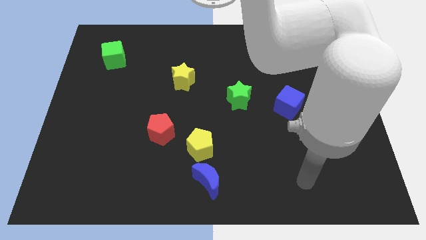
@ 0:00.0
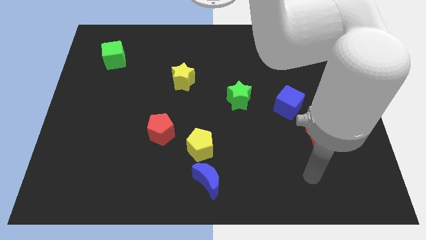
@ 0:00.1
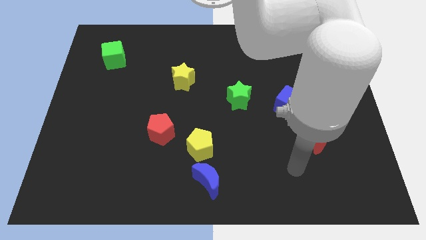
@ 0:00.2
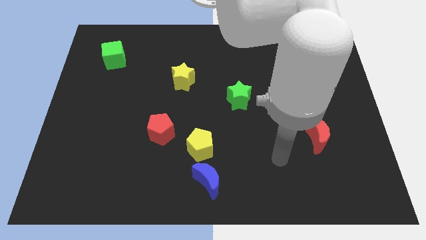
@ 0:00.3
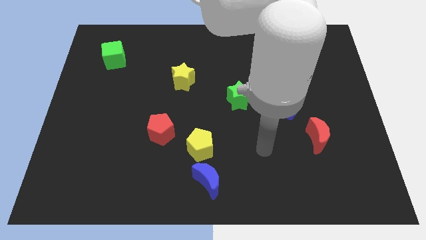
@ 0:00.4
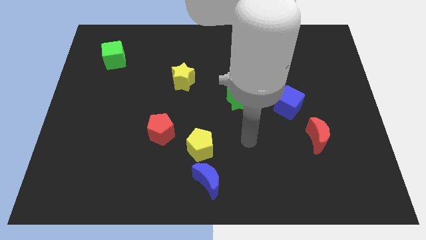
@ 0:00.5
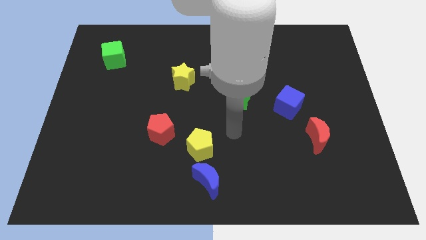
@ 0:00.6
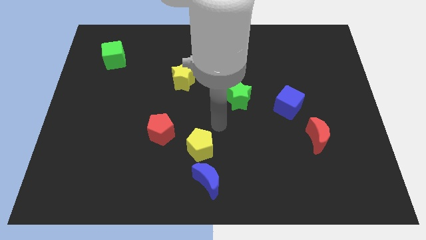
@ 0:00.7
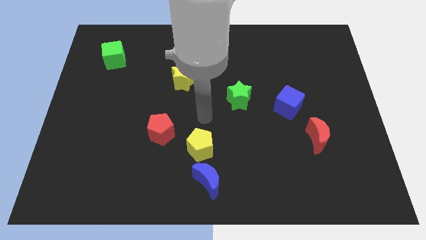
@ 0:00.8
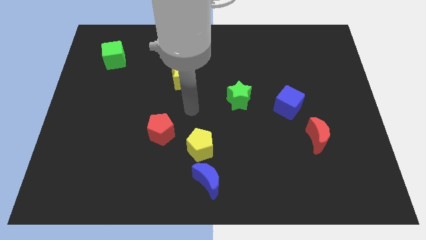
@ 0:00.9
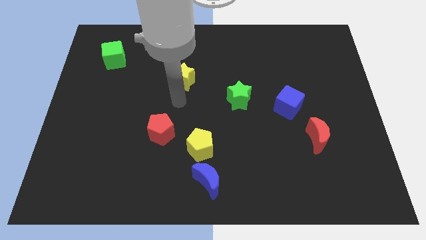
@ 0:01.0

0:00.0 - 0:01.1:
point the arm below the yellow star

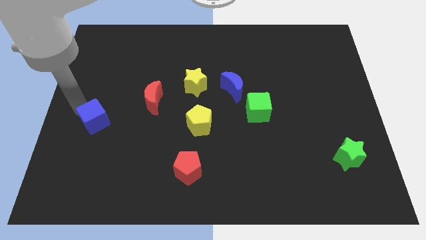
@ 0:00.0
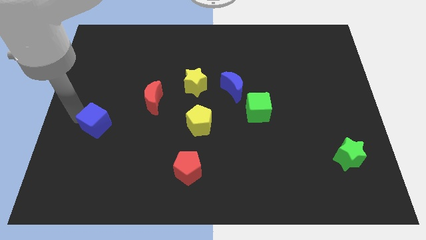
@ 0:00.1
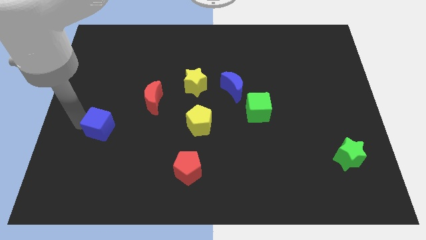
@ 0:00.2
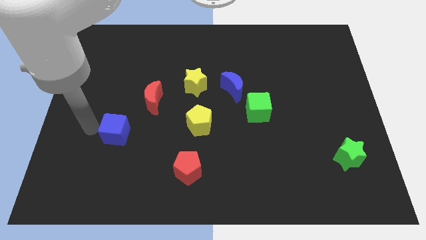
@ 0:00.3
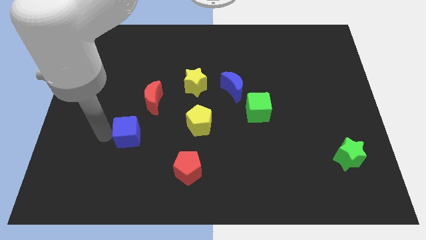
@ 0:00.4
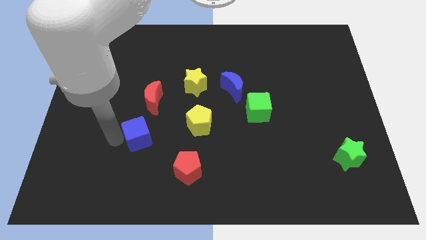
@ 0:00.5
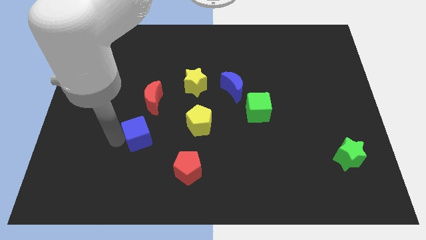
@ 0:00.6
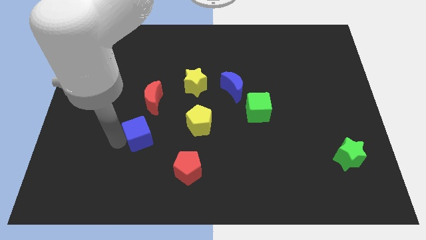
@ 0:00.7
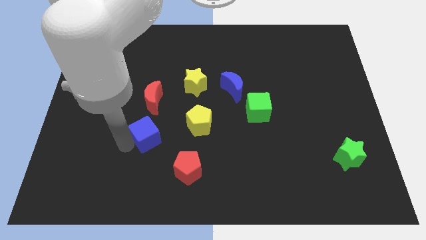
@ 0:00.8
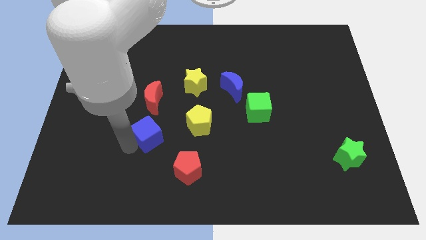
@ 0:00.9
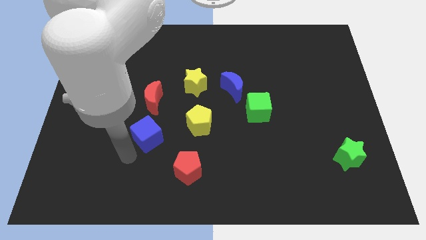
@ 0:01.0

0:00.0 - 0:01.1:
place the blue cube below the red moon

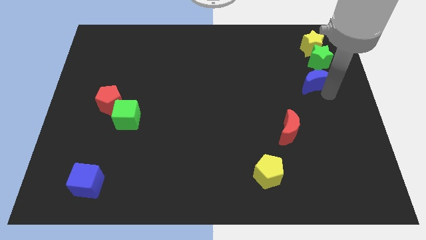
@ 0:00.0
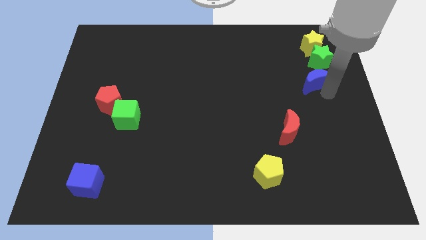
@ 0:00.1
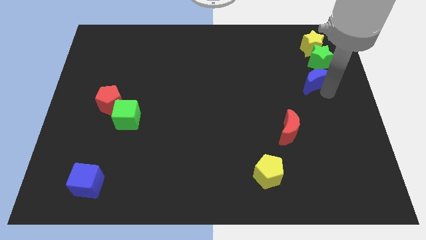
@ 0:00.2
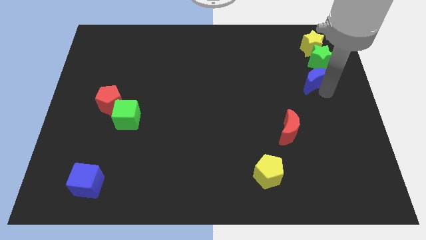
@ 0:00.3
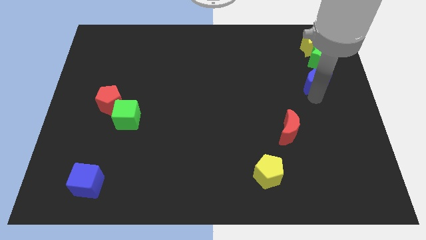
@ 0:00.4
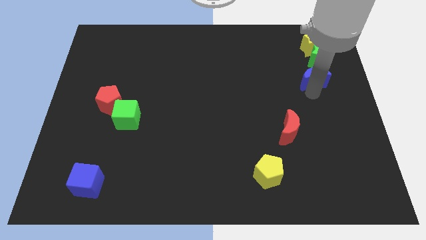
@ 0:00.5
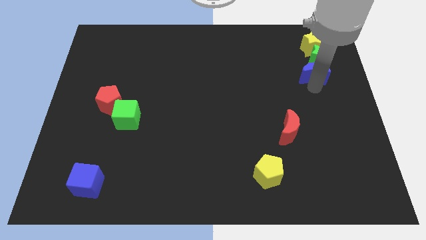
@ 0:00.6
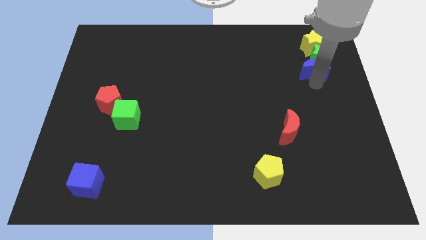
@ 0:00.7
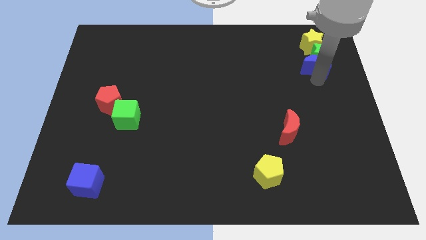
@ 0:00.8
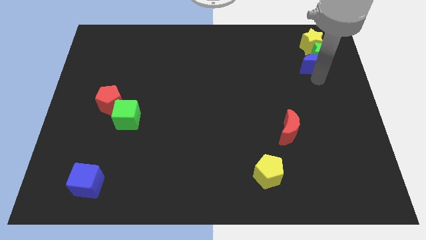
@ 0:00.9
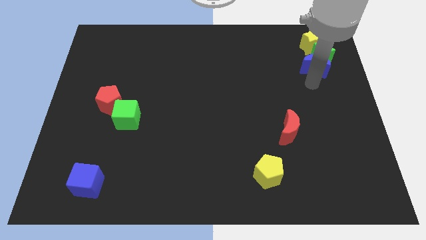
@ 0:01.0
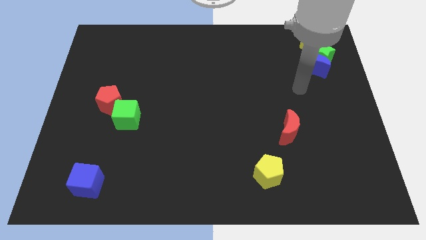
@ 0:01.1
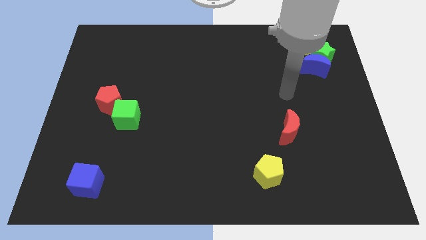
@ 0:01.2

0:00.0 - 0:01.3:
push the blue crescent below the green star

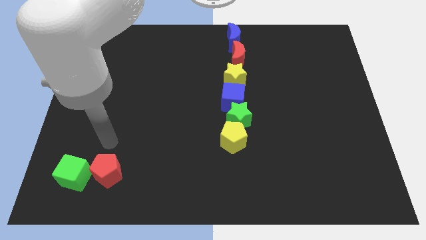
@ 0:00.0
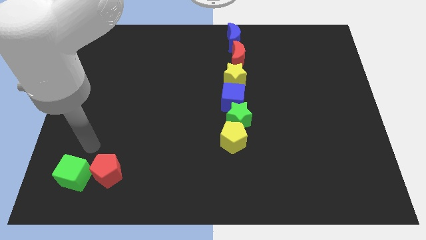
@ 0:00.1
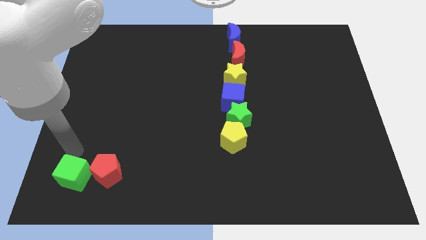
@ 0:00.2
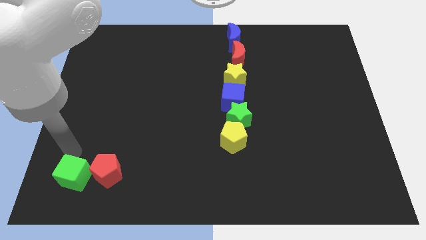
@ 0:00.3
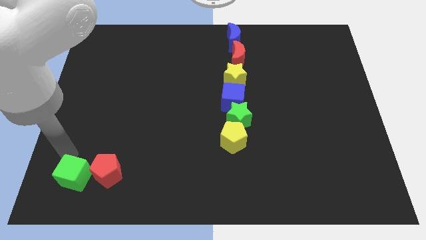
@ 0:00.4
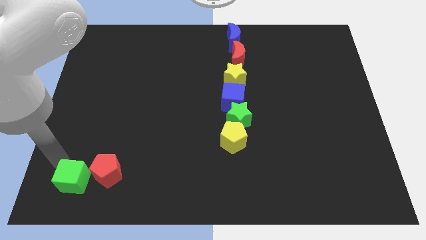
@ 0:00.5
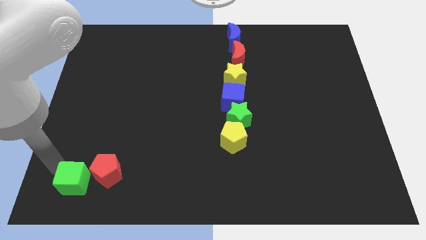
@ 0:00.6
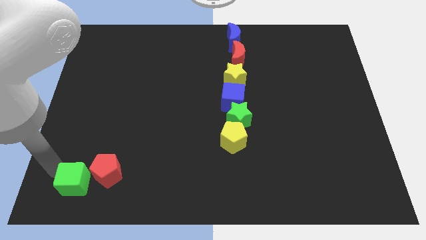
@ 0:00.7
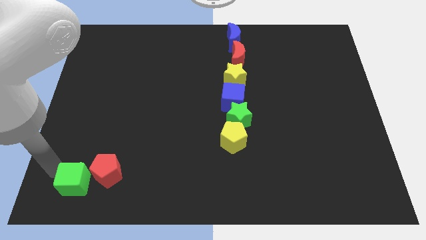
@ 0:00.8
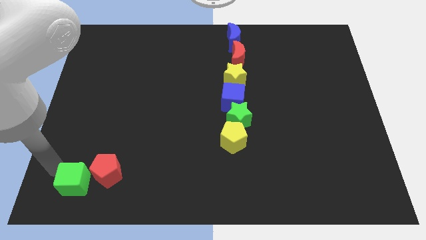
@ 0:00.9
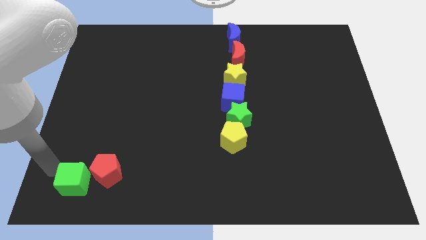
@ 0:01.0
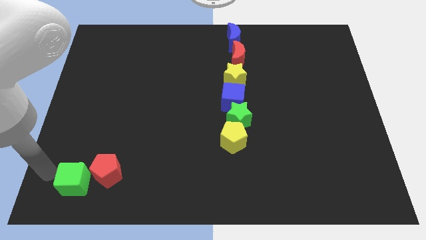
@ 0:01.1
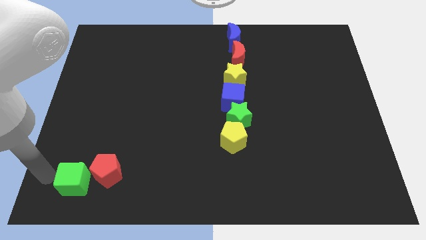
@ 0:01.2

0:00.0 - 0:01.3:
slightly move the green cube towards down

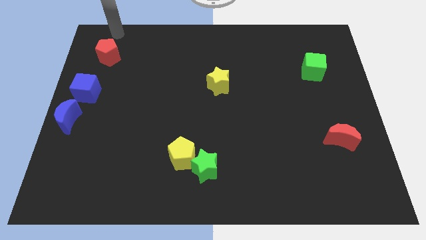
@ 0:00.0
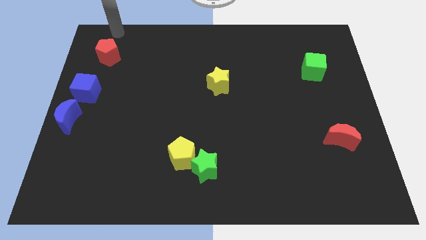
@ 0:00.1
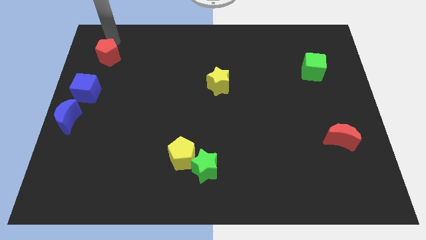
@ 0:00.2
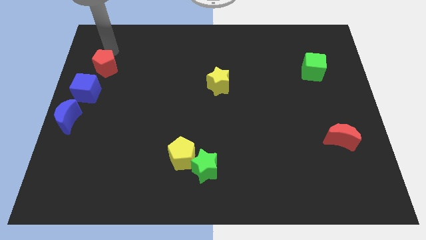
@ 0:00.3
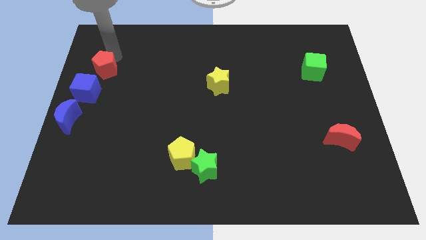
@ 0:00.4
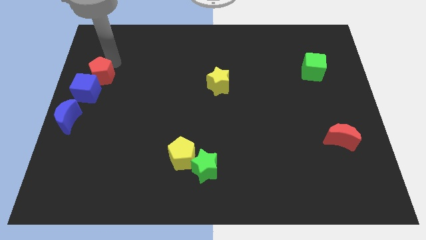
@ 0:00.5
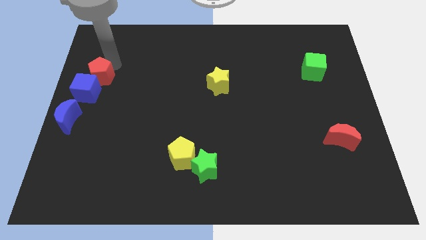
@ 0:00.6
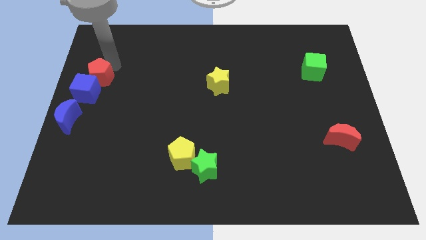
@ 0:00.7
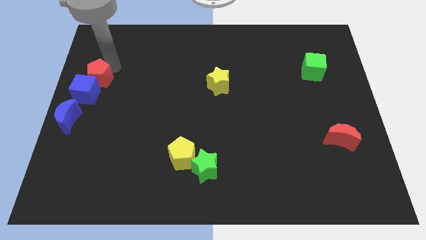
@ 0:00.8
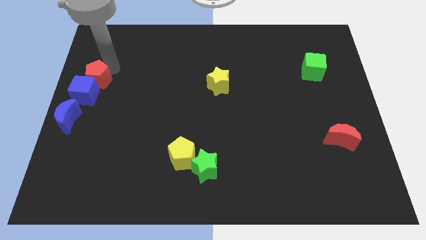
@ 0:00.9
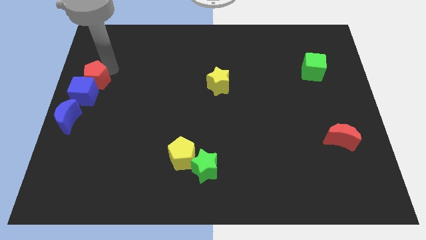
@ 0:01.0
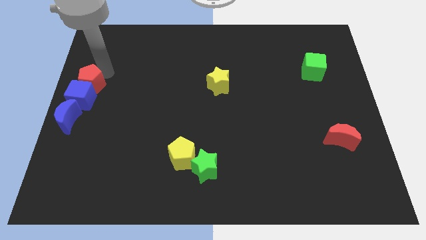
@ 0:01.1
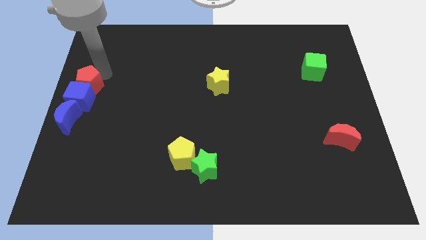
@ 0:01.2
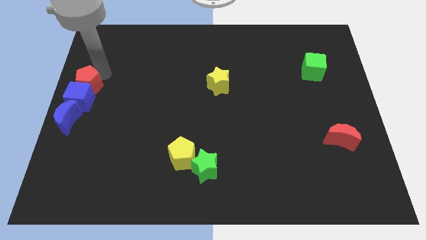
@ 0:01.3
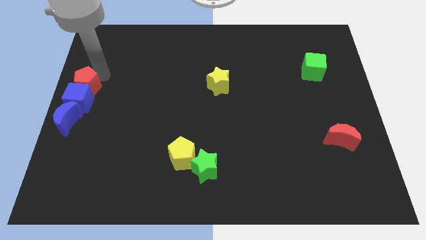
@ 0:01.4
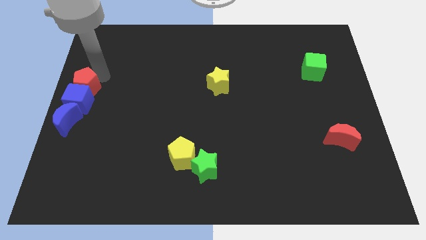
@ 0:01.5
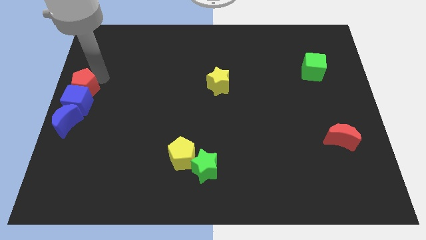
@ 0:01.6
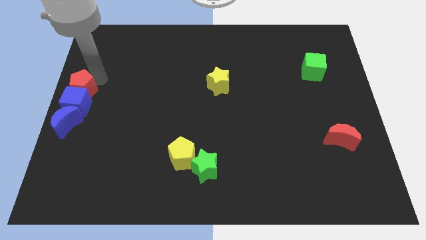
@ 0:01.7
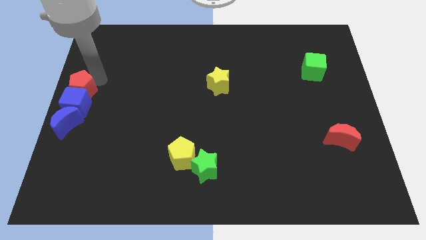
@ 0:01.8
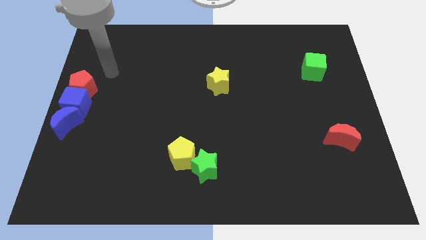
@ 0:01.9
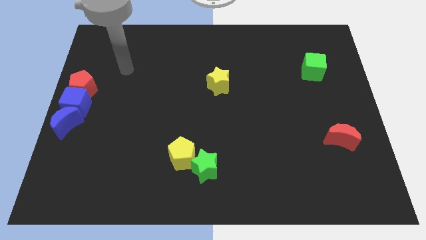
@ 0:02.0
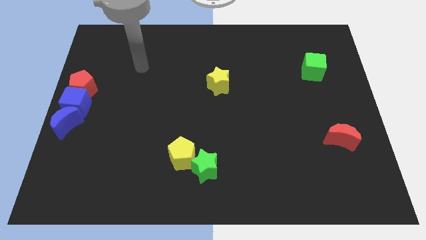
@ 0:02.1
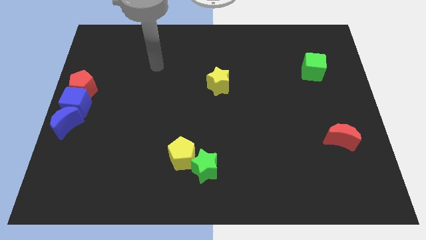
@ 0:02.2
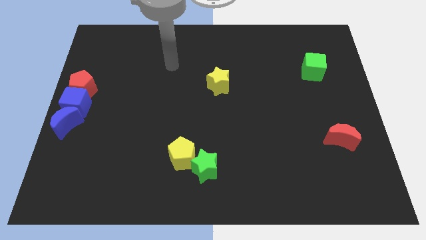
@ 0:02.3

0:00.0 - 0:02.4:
push the red pentagon into the blue cube

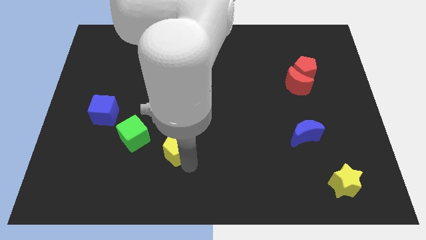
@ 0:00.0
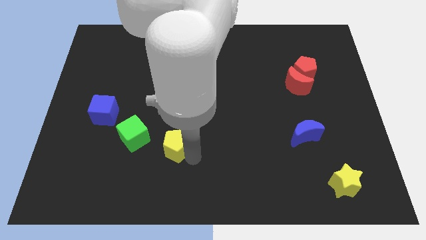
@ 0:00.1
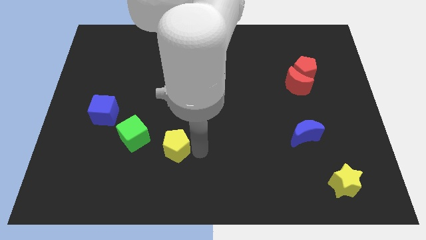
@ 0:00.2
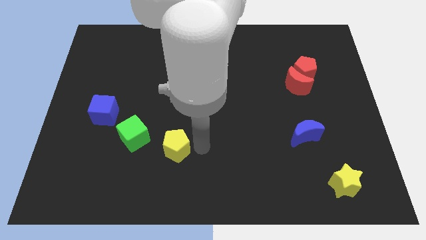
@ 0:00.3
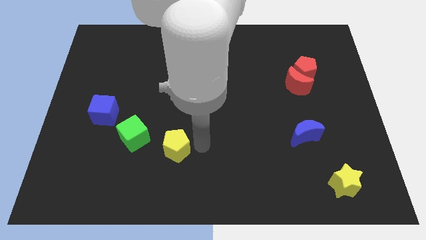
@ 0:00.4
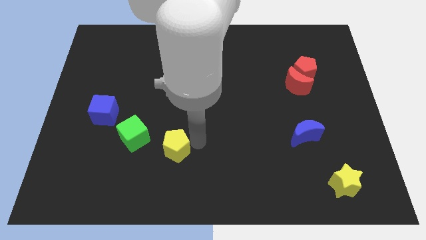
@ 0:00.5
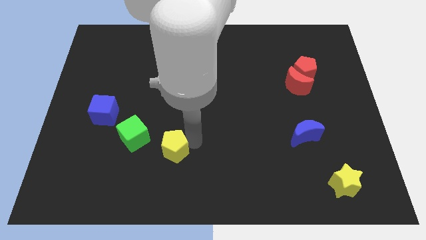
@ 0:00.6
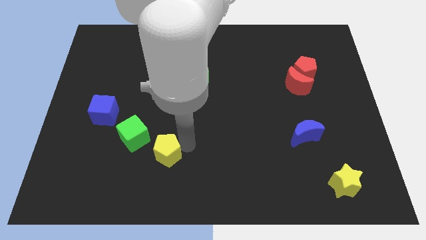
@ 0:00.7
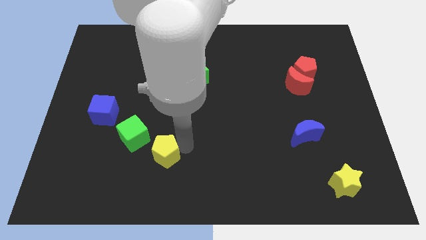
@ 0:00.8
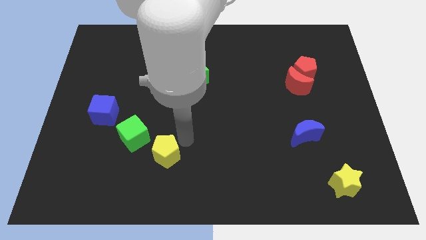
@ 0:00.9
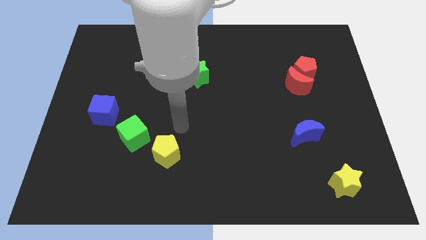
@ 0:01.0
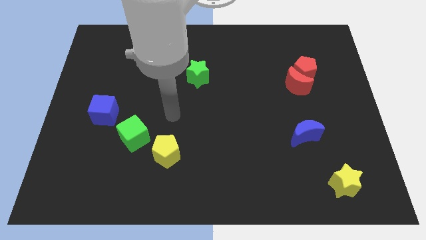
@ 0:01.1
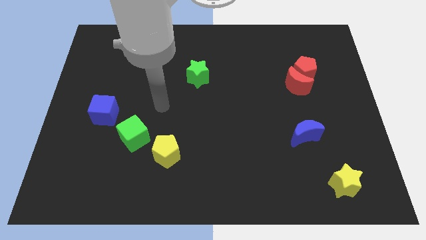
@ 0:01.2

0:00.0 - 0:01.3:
place yellow pentagon to the bottom right of green cube

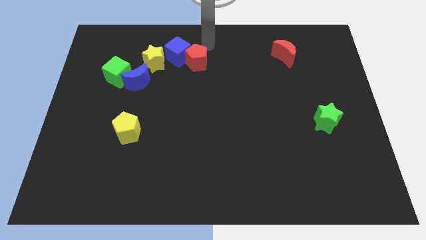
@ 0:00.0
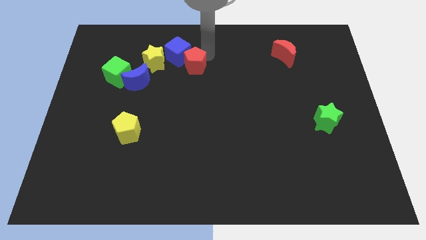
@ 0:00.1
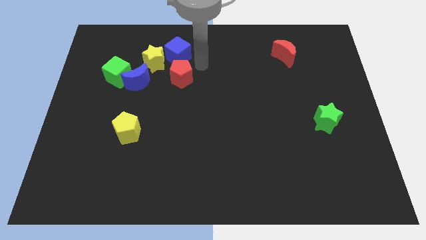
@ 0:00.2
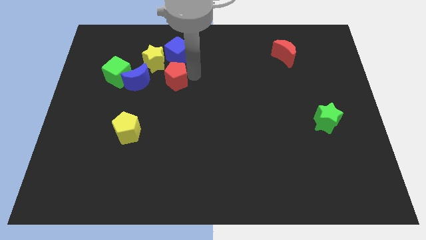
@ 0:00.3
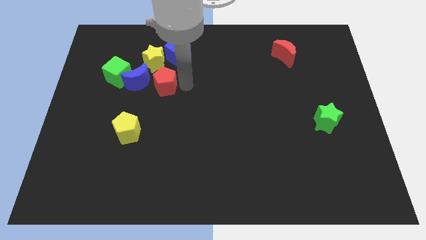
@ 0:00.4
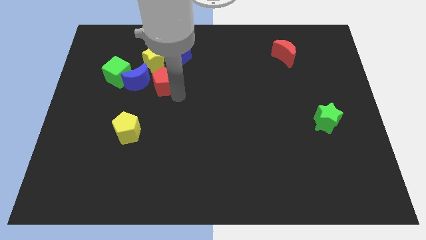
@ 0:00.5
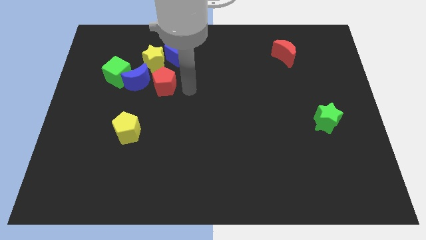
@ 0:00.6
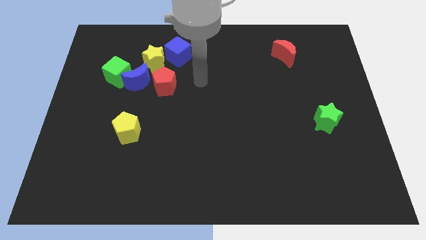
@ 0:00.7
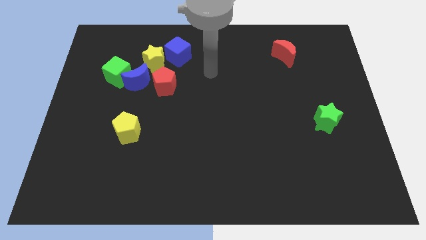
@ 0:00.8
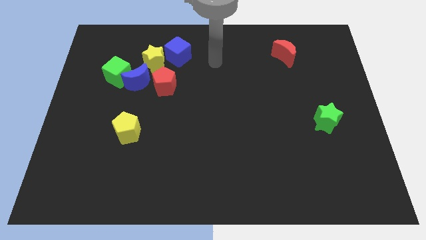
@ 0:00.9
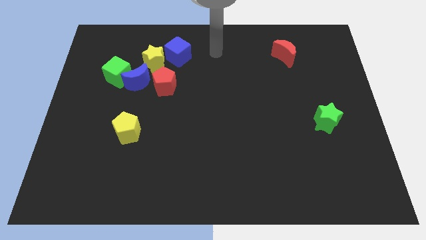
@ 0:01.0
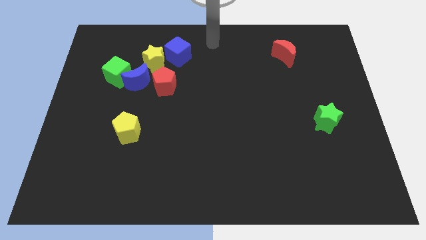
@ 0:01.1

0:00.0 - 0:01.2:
separate the red pentagon from the blue cube
